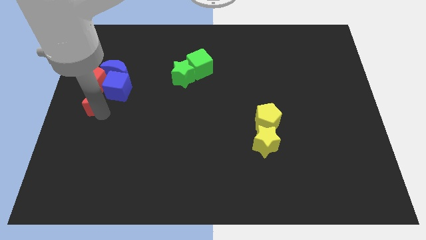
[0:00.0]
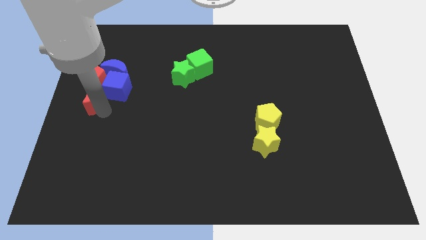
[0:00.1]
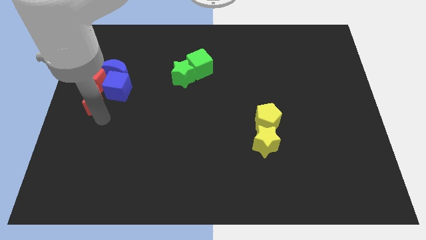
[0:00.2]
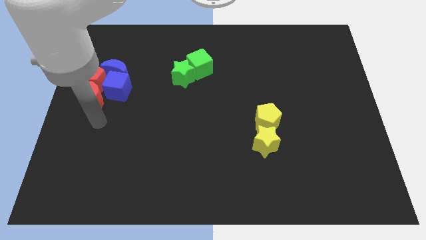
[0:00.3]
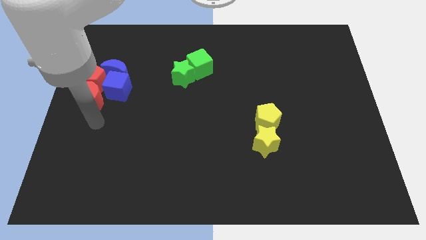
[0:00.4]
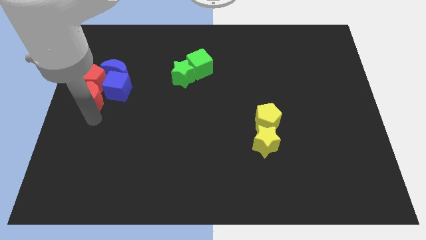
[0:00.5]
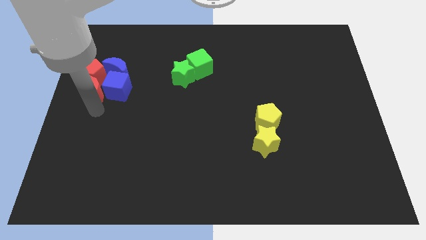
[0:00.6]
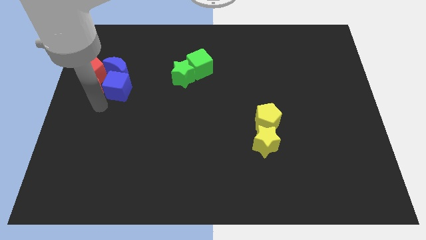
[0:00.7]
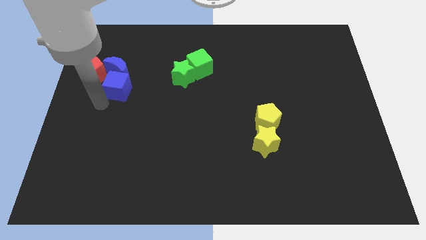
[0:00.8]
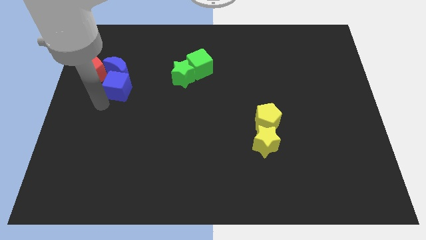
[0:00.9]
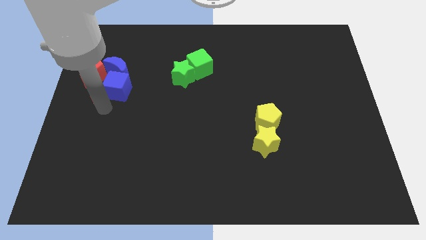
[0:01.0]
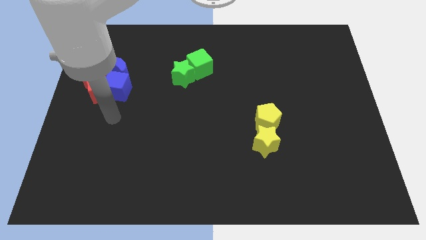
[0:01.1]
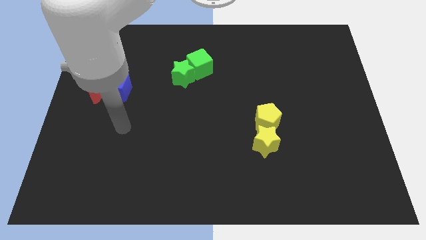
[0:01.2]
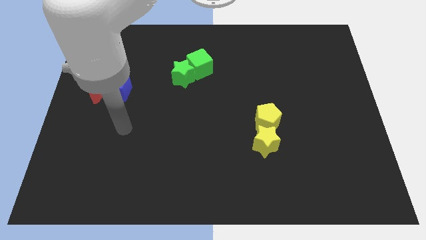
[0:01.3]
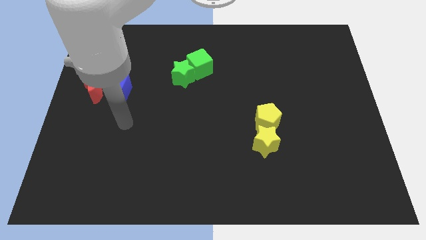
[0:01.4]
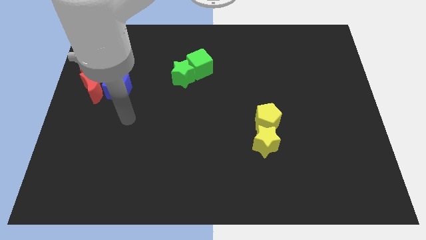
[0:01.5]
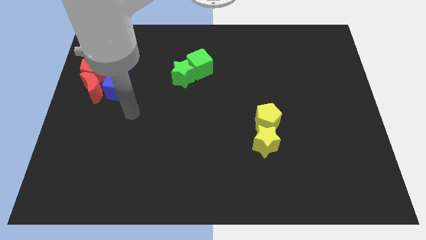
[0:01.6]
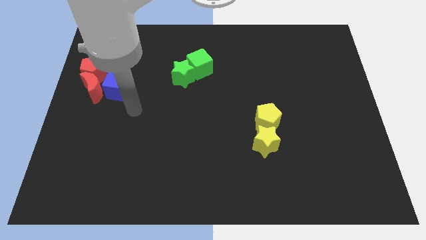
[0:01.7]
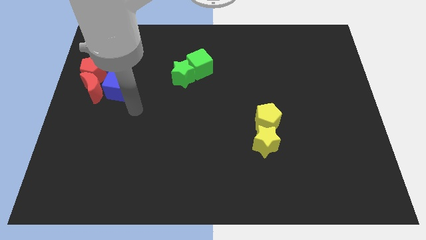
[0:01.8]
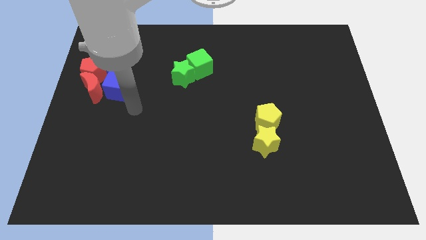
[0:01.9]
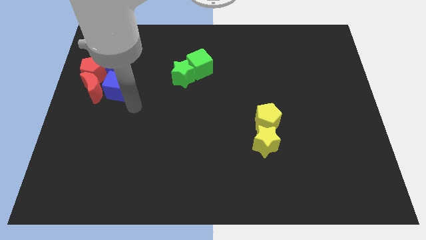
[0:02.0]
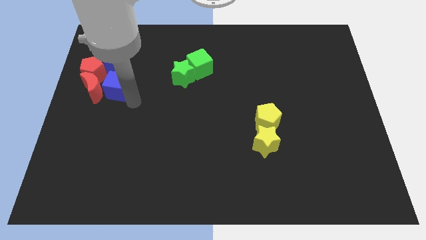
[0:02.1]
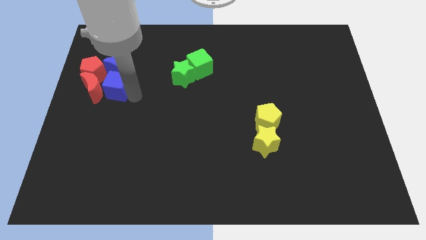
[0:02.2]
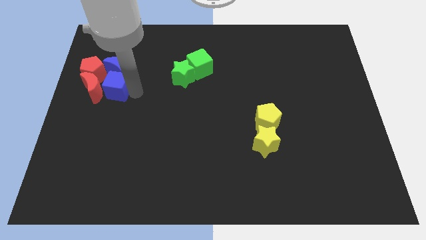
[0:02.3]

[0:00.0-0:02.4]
push the red pentagon with the red crescent slightly towards the top left of the board

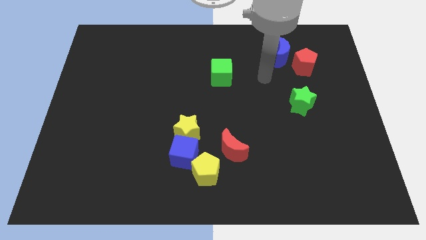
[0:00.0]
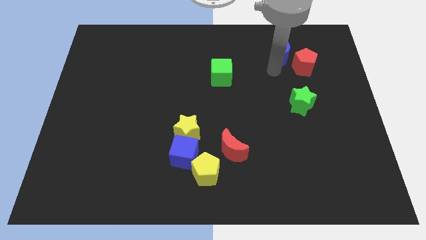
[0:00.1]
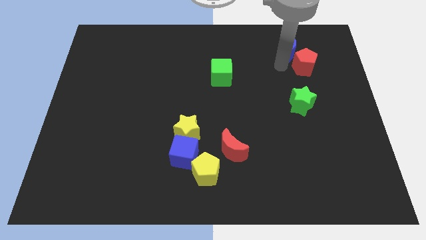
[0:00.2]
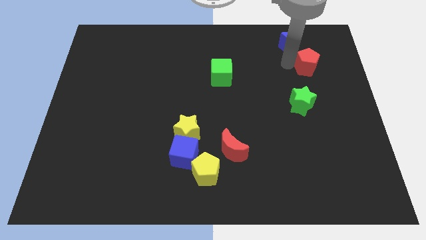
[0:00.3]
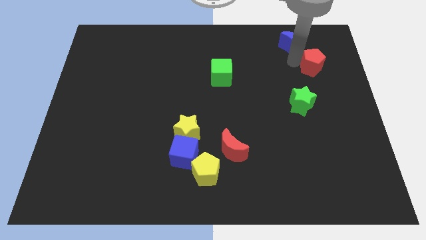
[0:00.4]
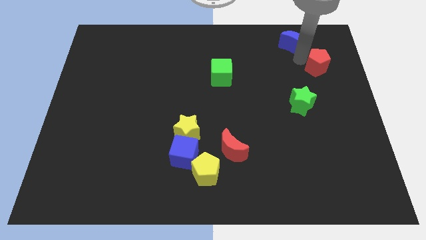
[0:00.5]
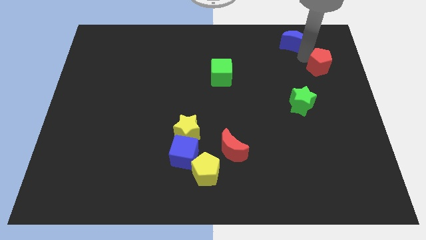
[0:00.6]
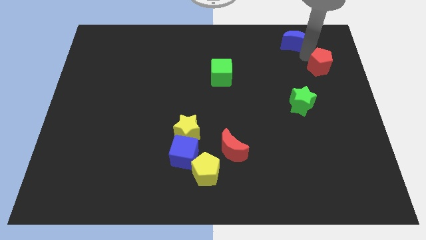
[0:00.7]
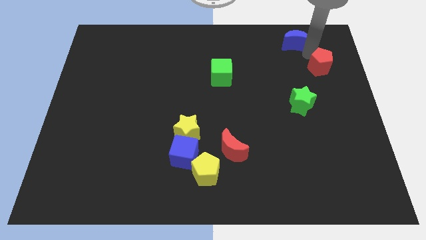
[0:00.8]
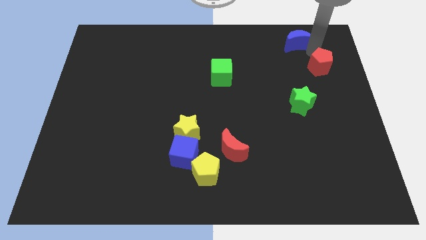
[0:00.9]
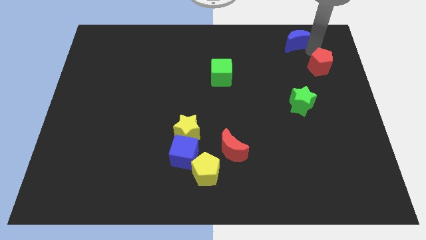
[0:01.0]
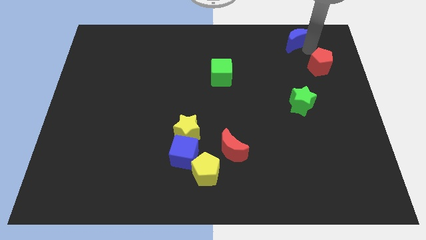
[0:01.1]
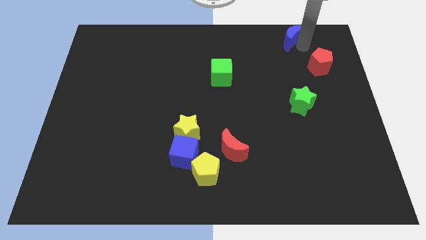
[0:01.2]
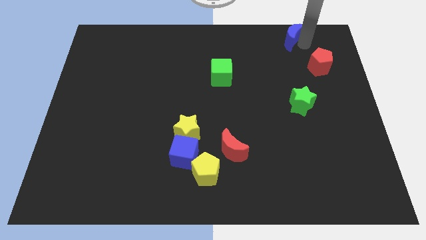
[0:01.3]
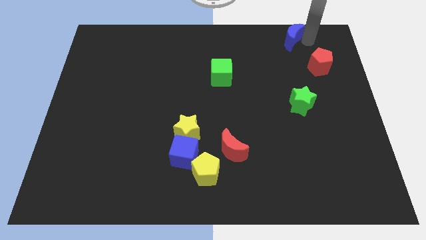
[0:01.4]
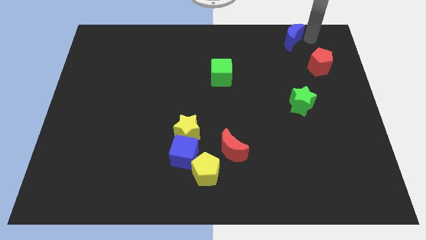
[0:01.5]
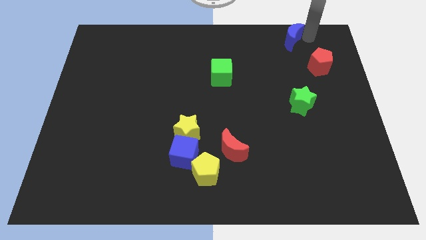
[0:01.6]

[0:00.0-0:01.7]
push the blue moon up slightly

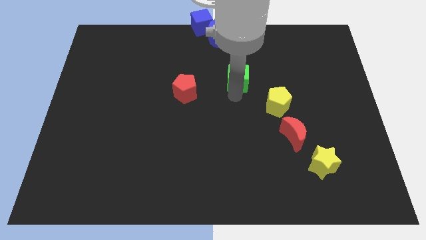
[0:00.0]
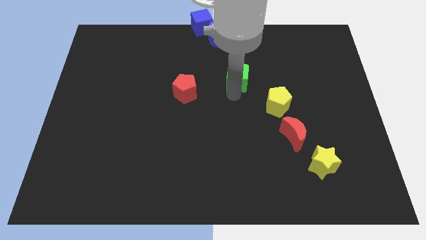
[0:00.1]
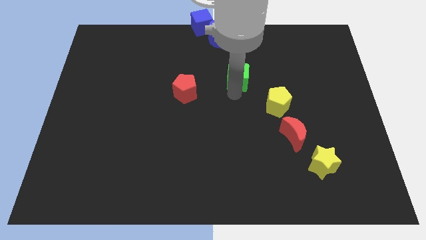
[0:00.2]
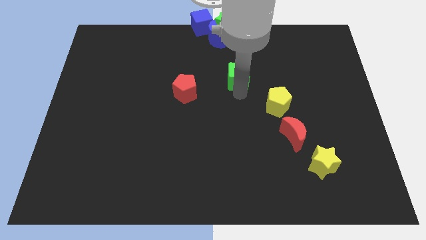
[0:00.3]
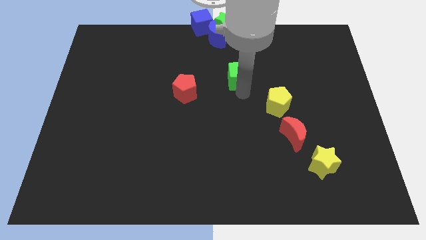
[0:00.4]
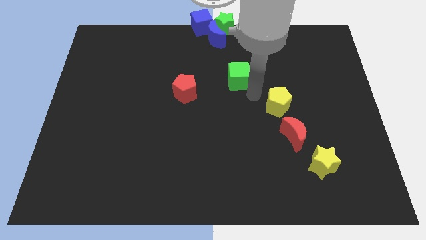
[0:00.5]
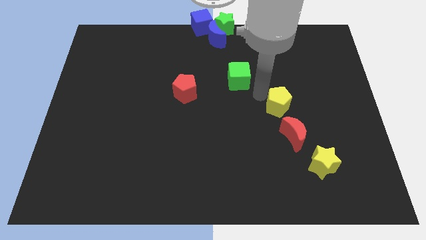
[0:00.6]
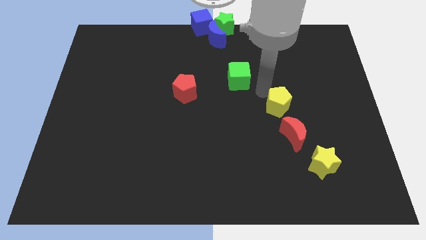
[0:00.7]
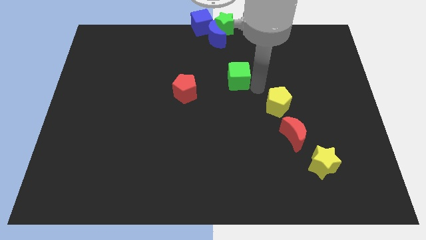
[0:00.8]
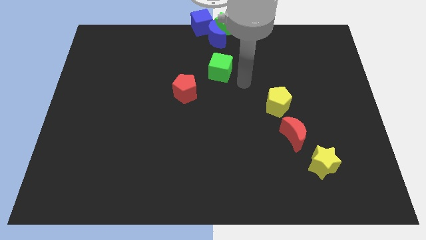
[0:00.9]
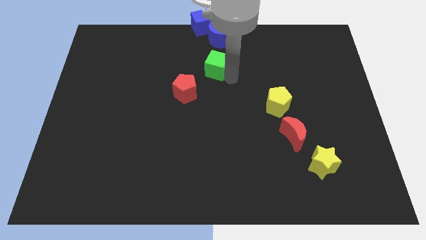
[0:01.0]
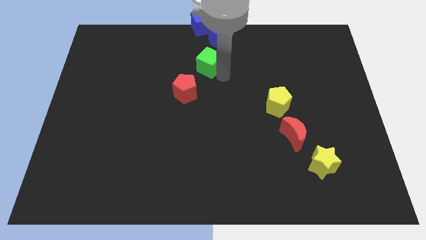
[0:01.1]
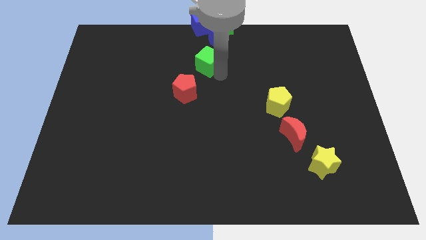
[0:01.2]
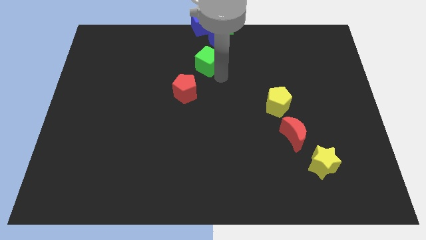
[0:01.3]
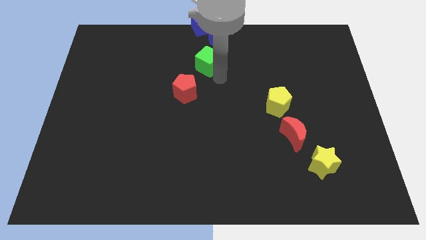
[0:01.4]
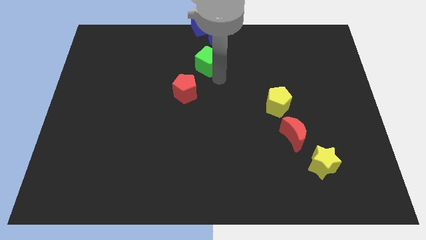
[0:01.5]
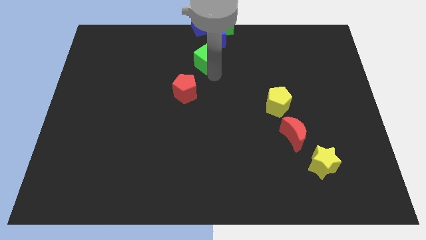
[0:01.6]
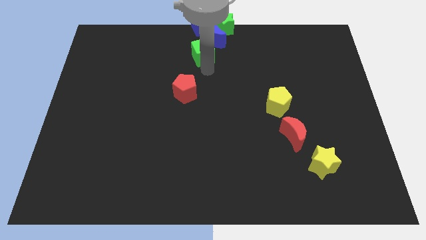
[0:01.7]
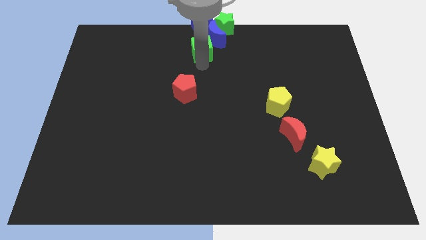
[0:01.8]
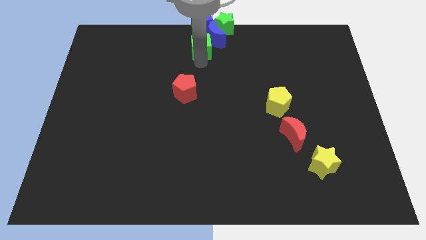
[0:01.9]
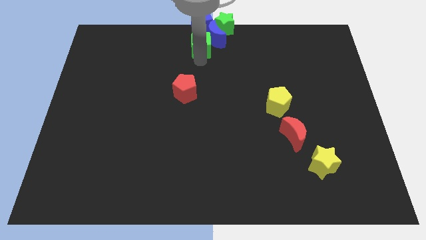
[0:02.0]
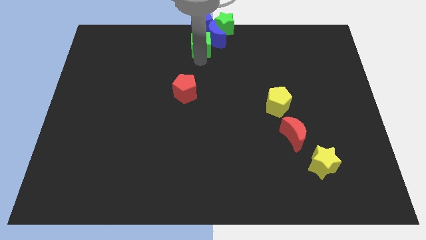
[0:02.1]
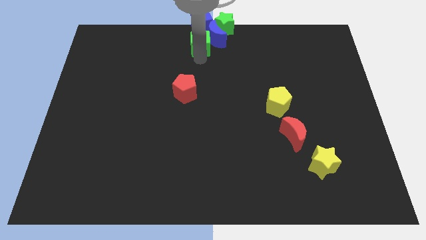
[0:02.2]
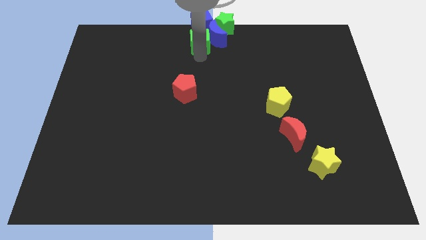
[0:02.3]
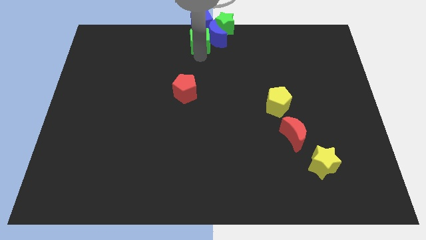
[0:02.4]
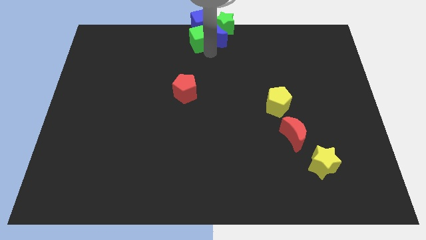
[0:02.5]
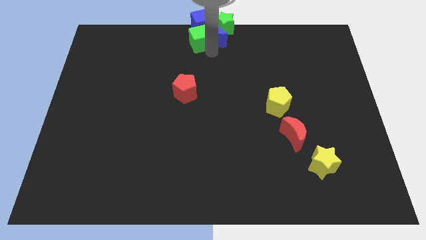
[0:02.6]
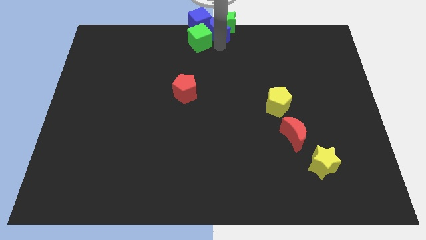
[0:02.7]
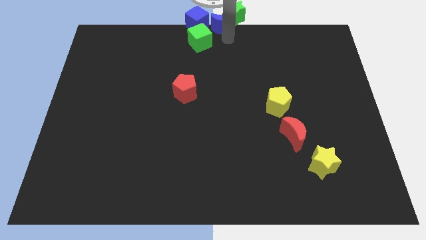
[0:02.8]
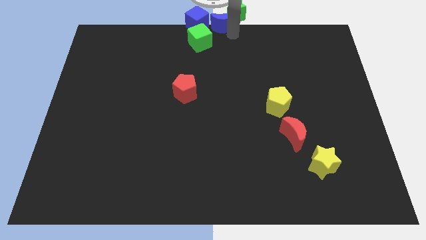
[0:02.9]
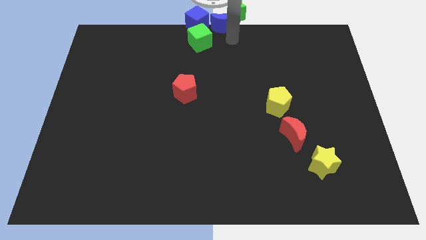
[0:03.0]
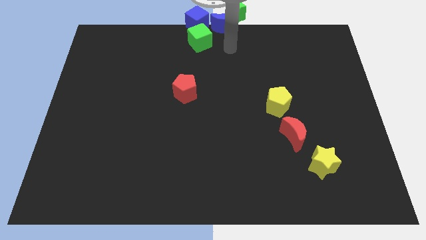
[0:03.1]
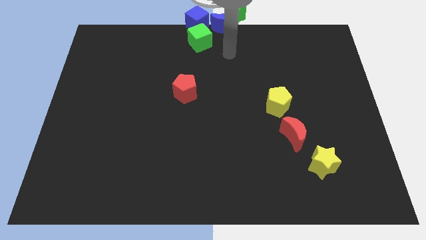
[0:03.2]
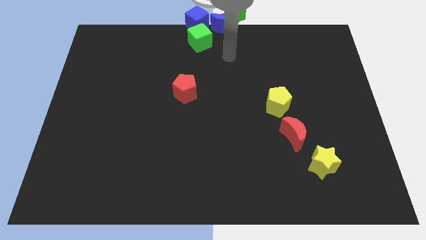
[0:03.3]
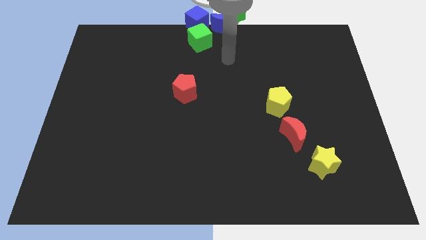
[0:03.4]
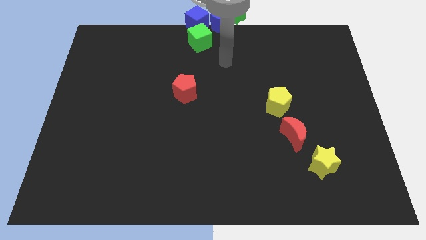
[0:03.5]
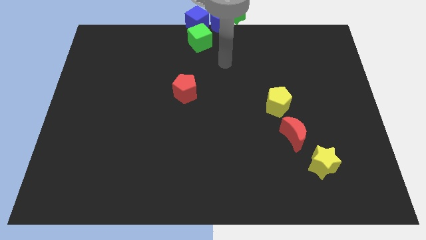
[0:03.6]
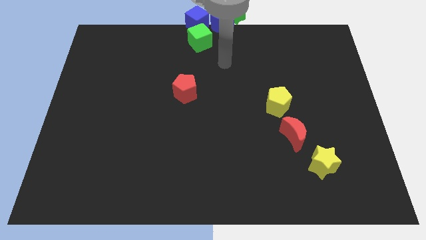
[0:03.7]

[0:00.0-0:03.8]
push the green cube into blue cube

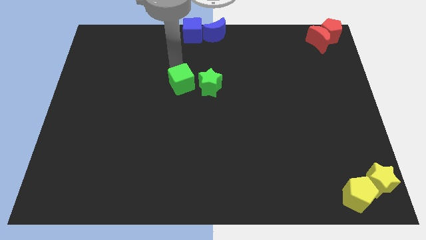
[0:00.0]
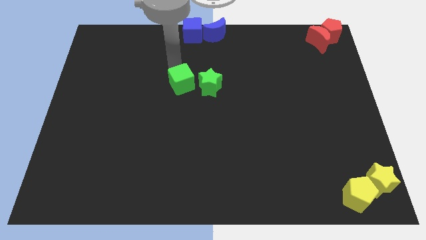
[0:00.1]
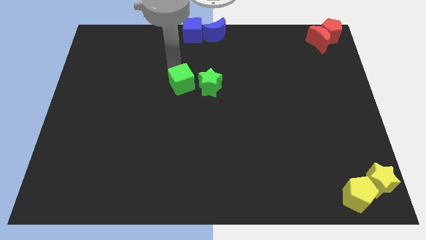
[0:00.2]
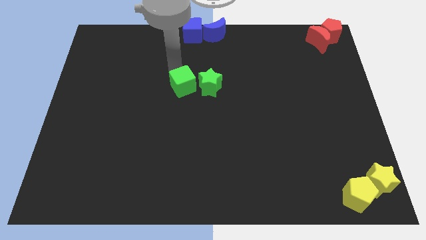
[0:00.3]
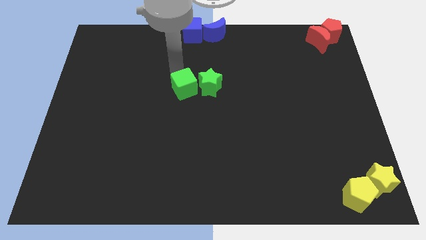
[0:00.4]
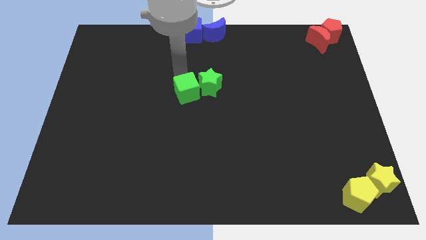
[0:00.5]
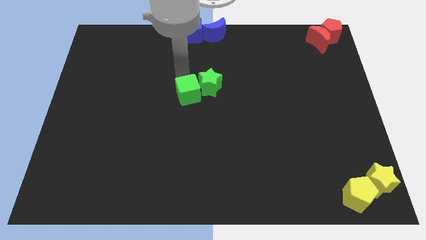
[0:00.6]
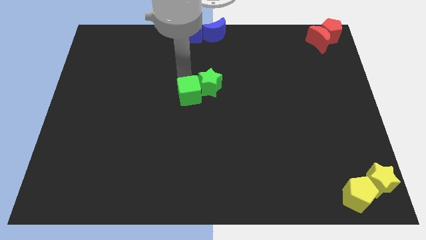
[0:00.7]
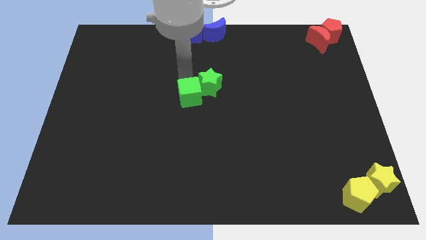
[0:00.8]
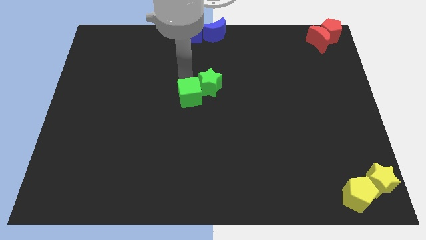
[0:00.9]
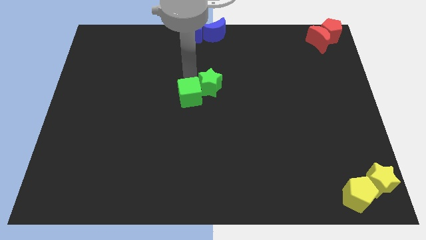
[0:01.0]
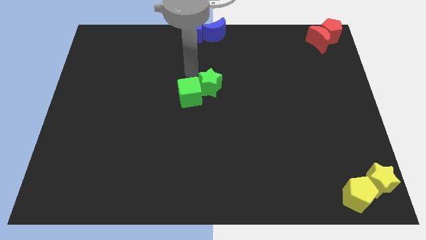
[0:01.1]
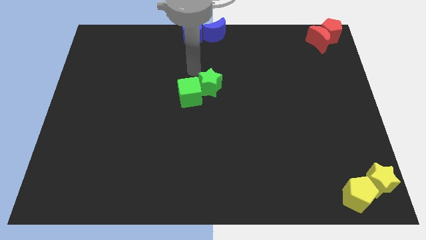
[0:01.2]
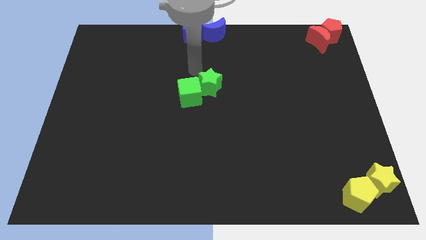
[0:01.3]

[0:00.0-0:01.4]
push the green cube slightly down
